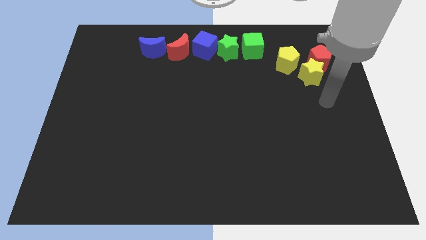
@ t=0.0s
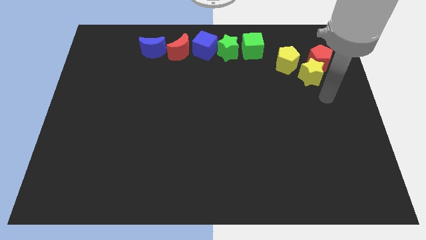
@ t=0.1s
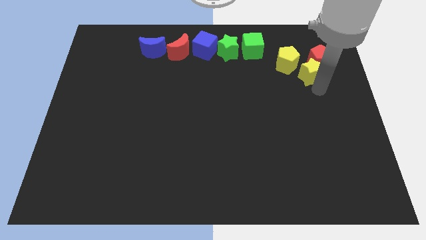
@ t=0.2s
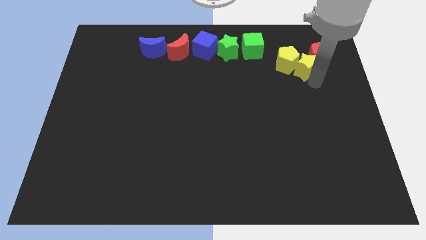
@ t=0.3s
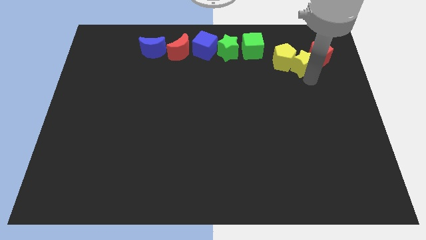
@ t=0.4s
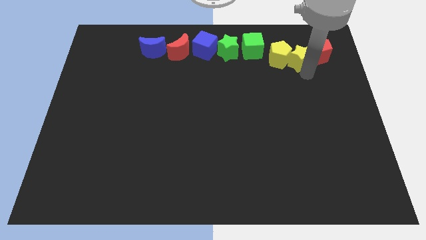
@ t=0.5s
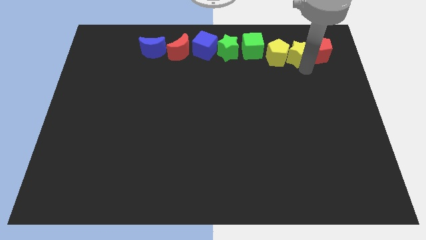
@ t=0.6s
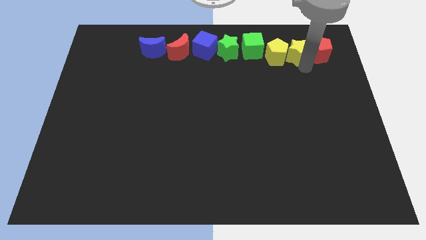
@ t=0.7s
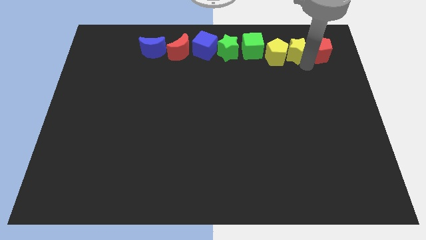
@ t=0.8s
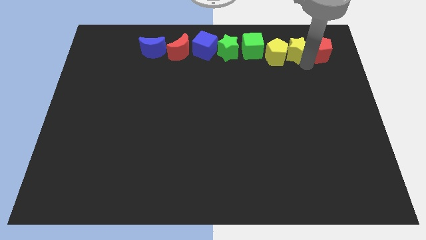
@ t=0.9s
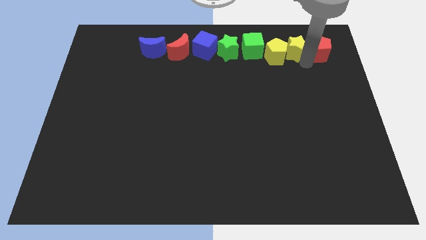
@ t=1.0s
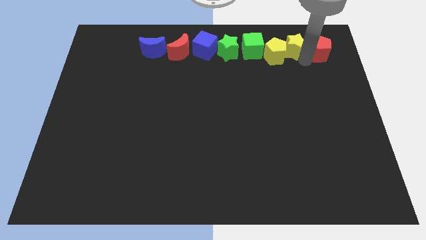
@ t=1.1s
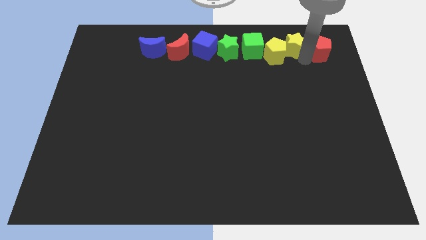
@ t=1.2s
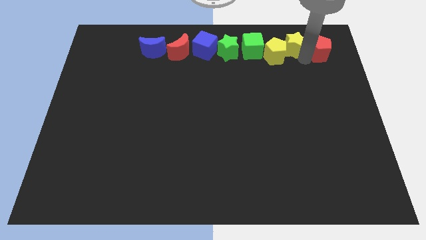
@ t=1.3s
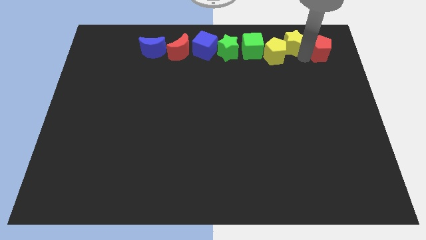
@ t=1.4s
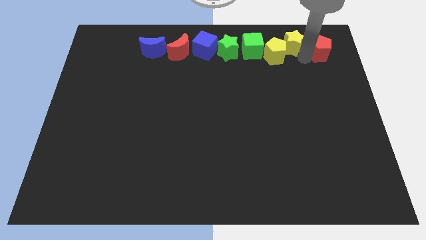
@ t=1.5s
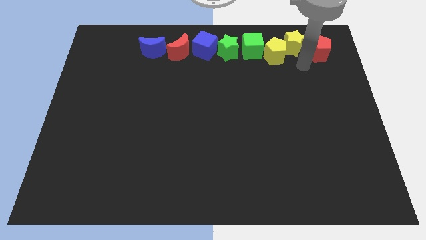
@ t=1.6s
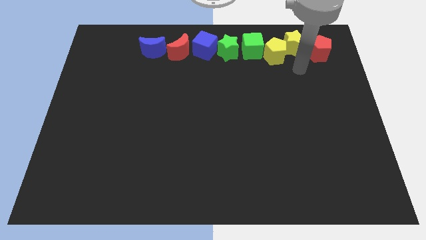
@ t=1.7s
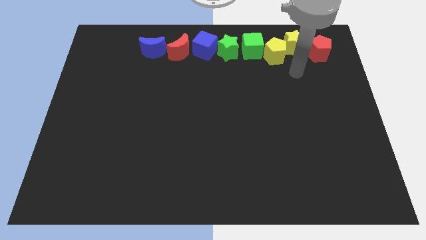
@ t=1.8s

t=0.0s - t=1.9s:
push the yellow star towards the top of the board

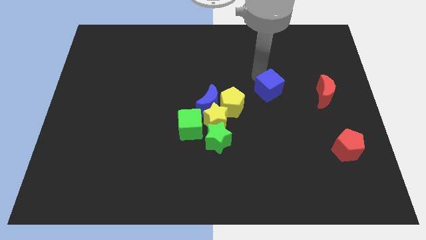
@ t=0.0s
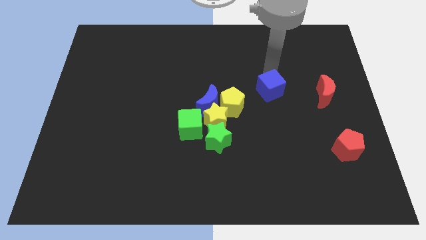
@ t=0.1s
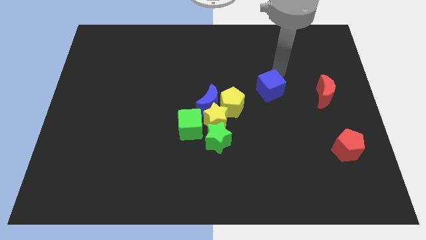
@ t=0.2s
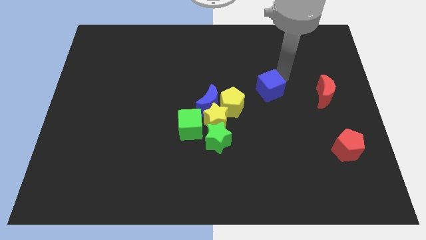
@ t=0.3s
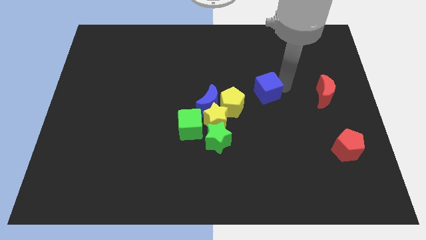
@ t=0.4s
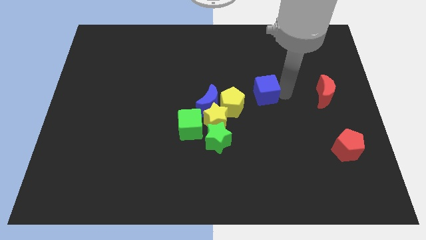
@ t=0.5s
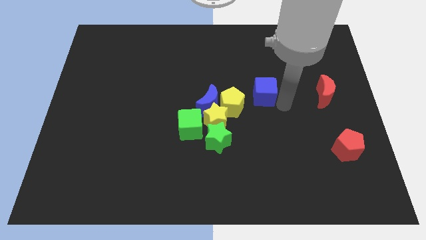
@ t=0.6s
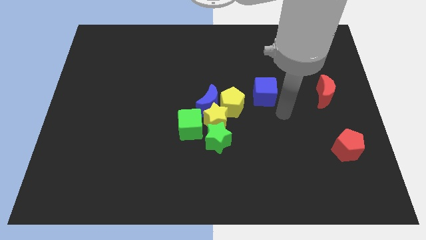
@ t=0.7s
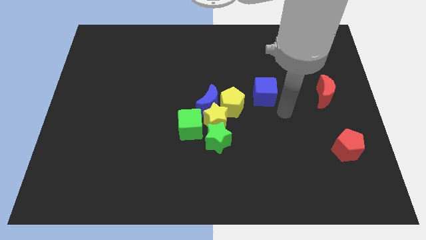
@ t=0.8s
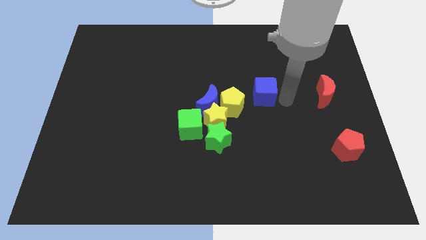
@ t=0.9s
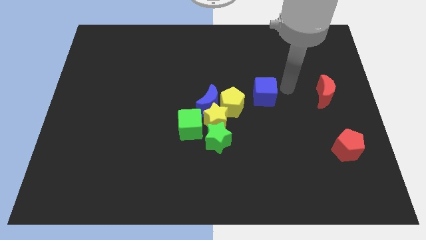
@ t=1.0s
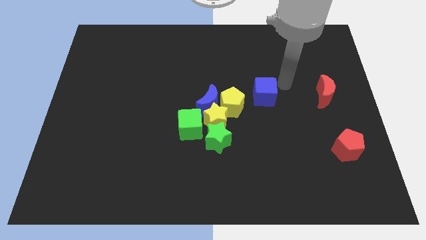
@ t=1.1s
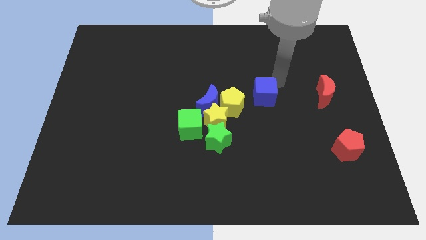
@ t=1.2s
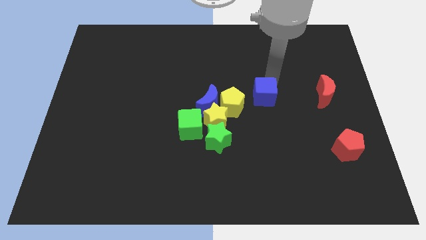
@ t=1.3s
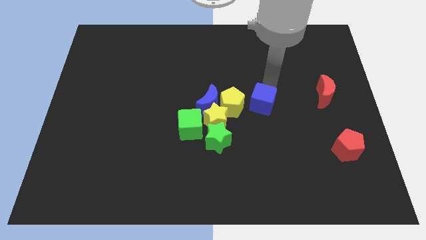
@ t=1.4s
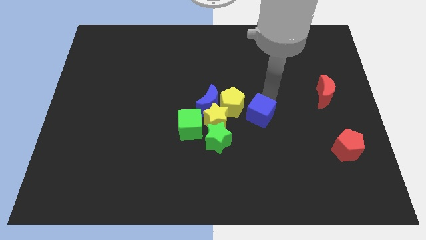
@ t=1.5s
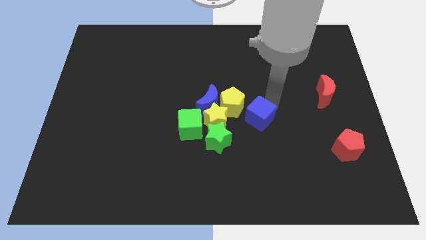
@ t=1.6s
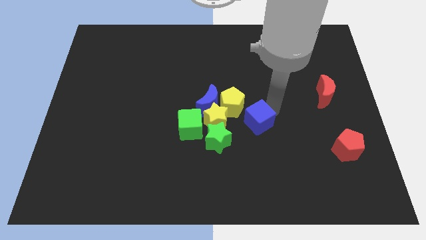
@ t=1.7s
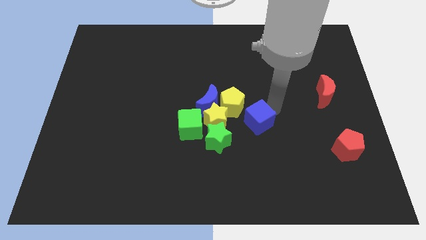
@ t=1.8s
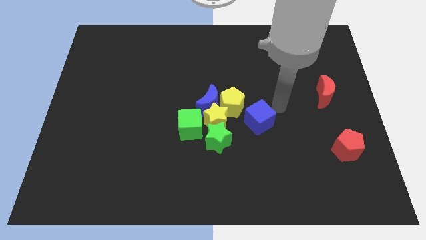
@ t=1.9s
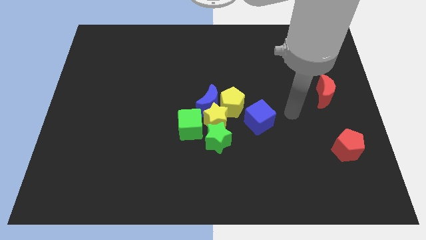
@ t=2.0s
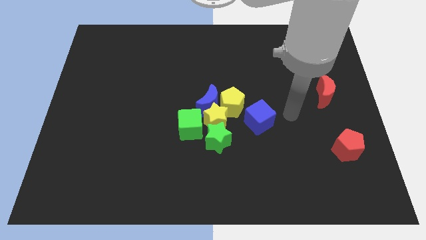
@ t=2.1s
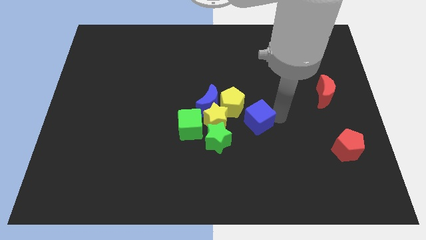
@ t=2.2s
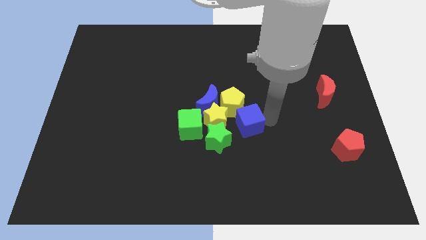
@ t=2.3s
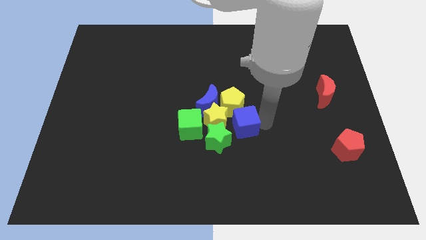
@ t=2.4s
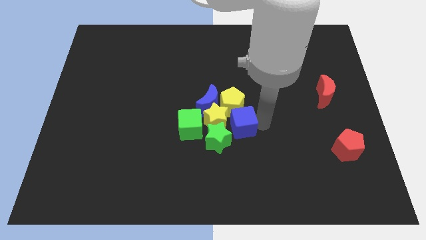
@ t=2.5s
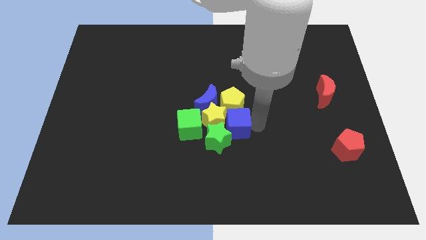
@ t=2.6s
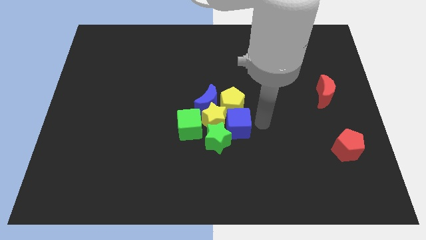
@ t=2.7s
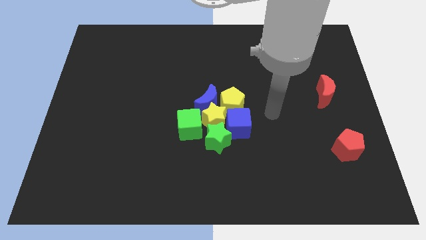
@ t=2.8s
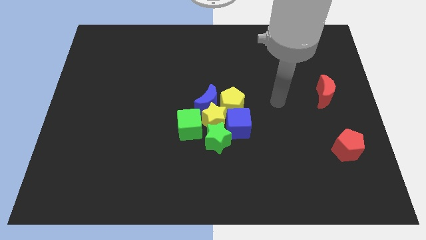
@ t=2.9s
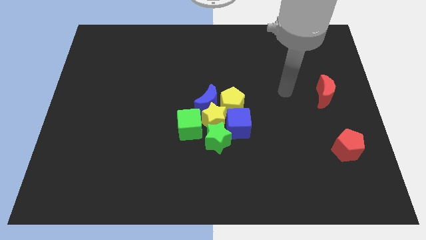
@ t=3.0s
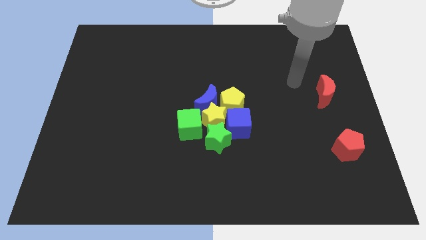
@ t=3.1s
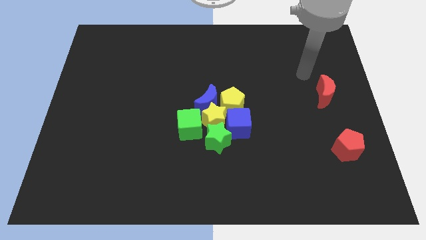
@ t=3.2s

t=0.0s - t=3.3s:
move the blue cube to the right of the yellow star

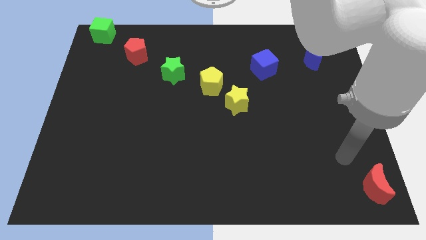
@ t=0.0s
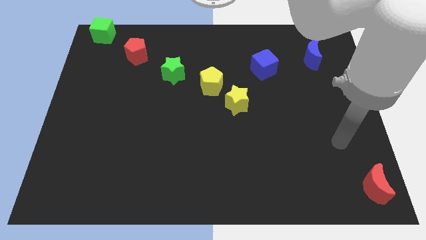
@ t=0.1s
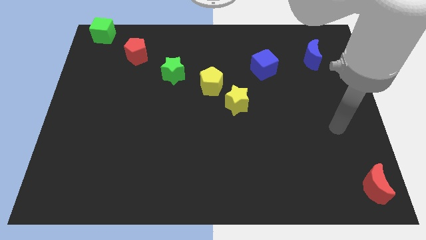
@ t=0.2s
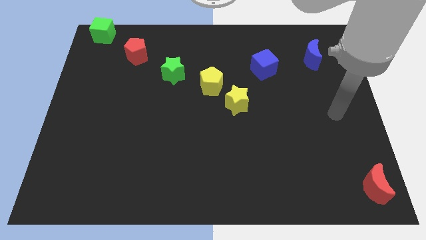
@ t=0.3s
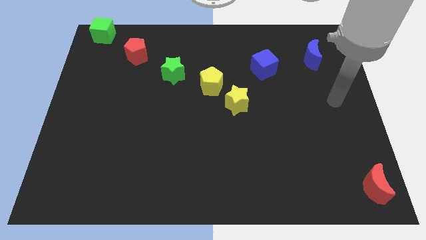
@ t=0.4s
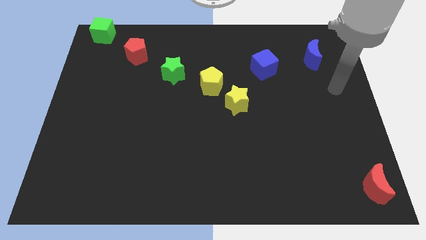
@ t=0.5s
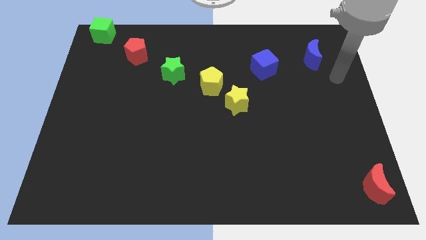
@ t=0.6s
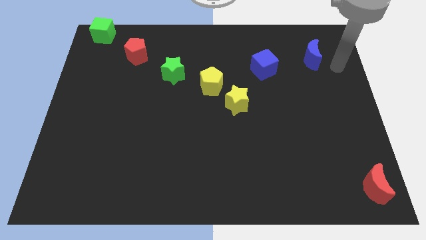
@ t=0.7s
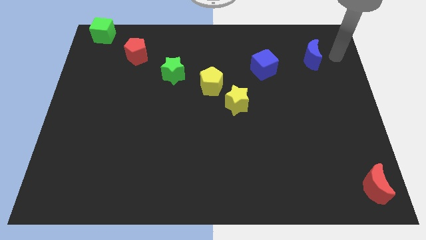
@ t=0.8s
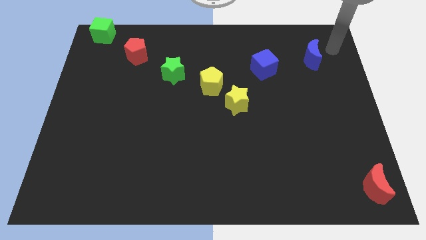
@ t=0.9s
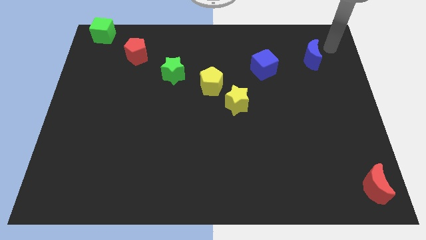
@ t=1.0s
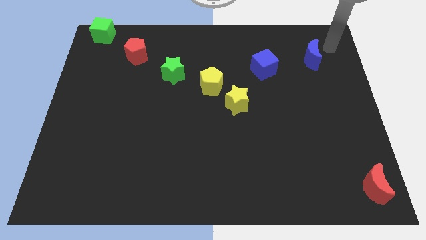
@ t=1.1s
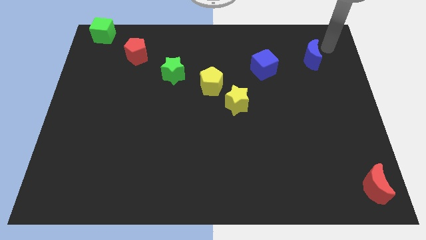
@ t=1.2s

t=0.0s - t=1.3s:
move yourself close to the blue moon

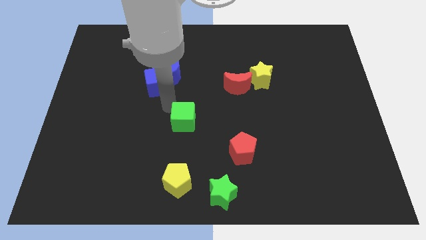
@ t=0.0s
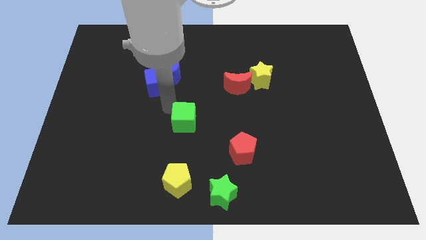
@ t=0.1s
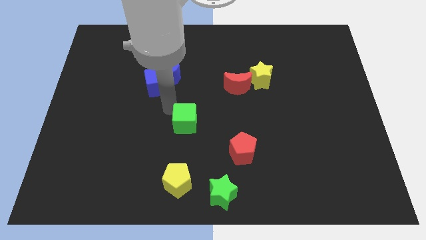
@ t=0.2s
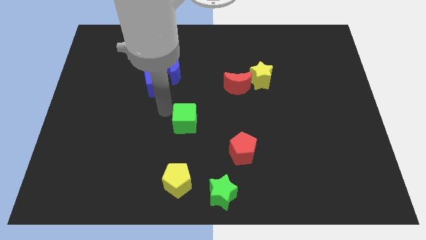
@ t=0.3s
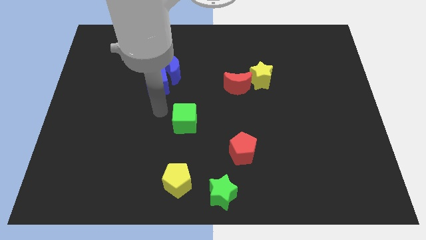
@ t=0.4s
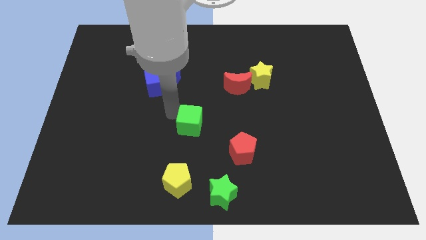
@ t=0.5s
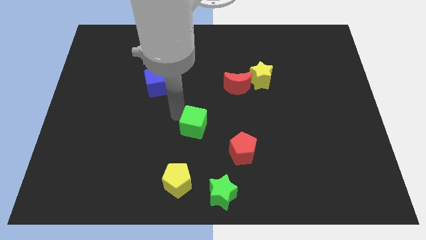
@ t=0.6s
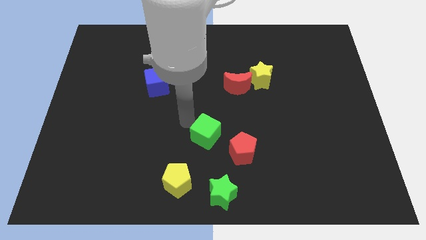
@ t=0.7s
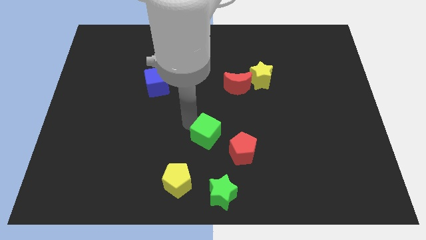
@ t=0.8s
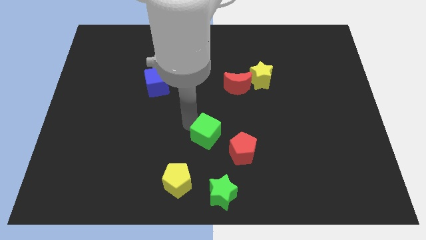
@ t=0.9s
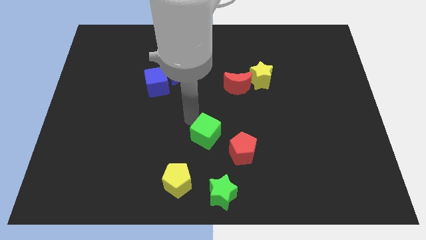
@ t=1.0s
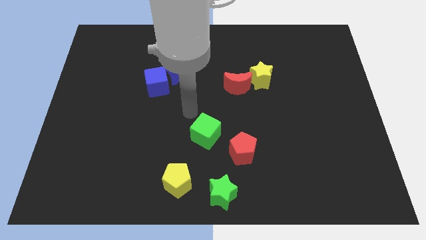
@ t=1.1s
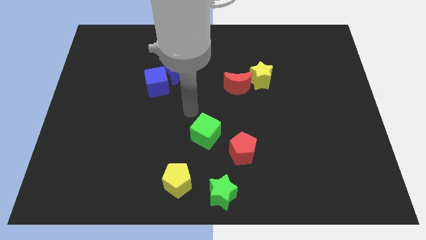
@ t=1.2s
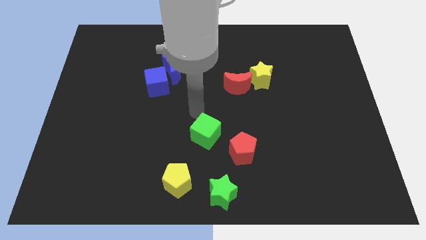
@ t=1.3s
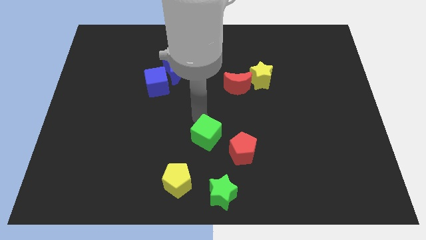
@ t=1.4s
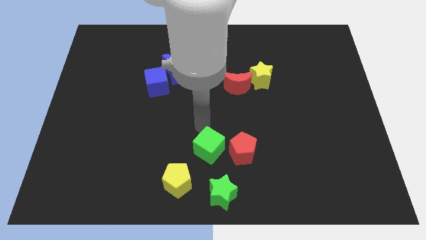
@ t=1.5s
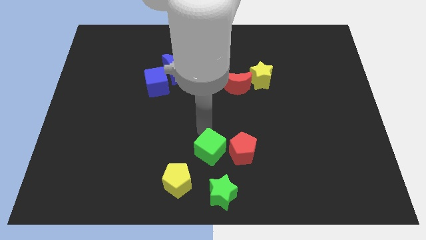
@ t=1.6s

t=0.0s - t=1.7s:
push the green cube to the left of the red pentagon

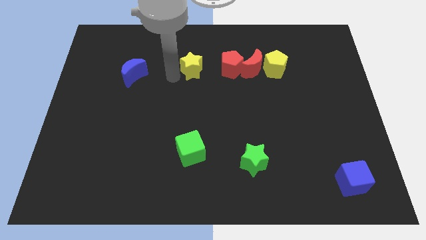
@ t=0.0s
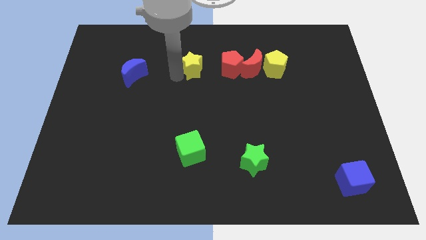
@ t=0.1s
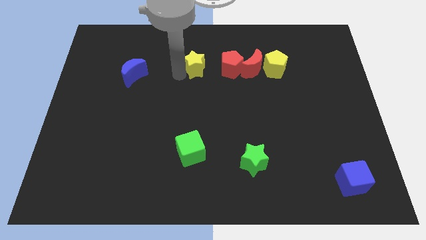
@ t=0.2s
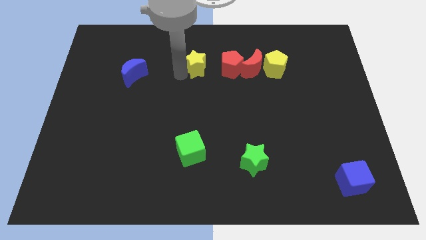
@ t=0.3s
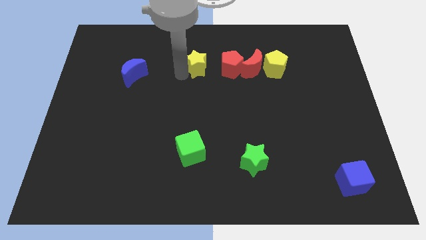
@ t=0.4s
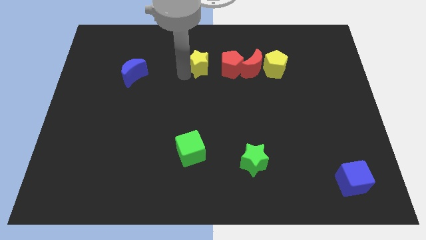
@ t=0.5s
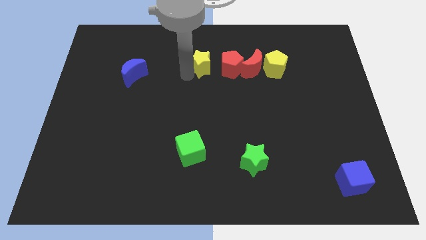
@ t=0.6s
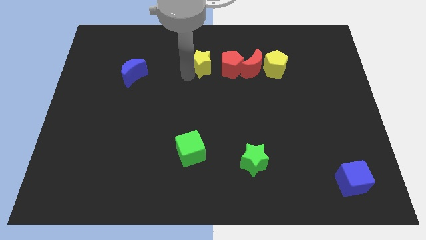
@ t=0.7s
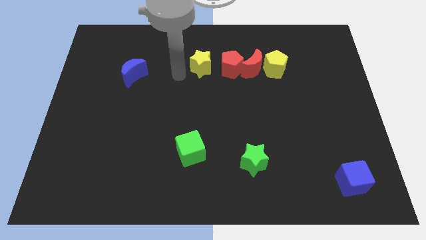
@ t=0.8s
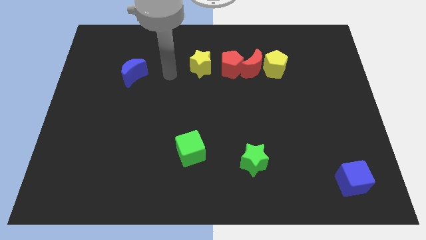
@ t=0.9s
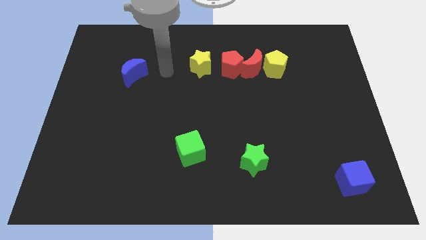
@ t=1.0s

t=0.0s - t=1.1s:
place yellow star in horizontal line of other blocks
